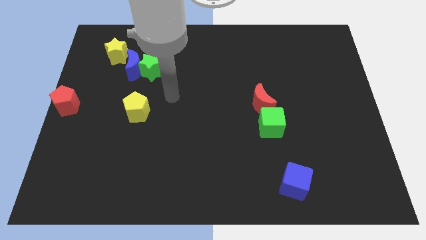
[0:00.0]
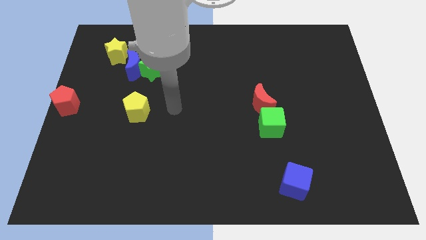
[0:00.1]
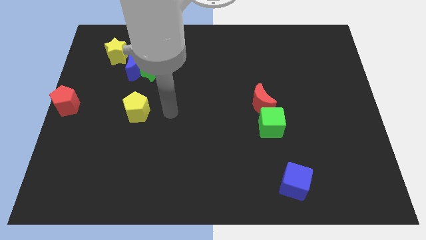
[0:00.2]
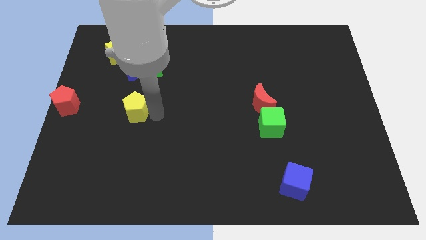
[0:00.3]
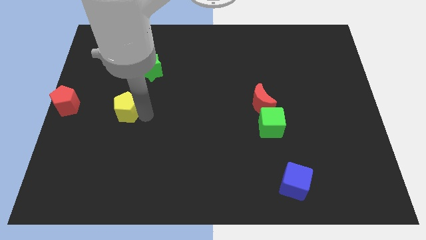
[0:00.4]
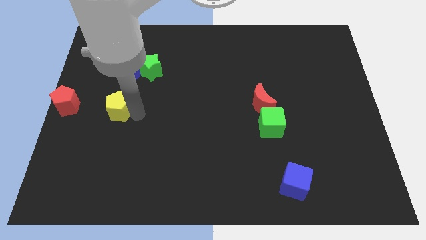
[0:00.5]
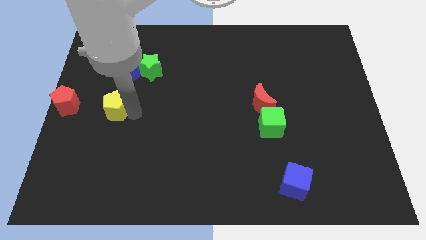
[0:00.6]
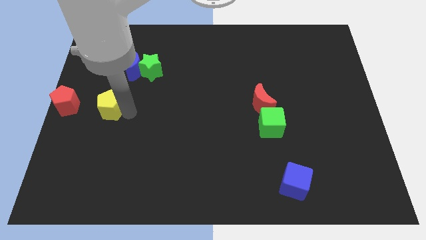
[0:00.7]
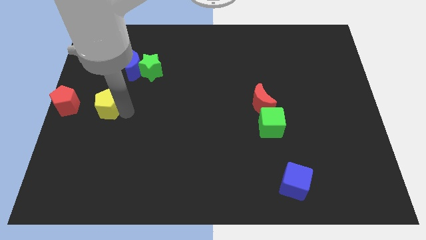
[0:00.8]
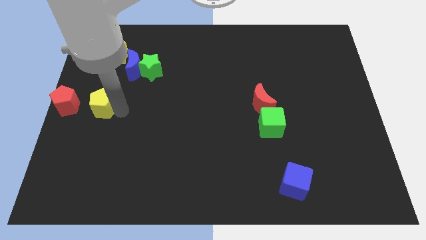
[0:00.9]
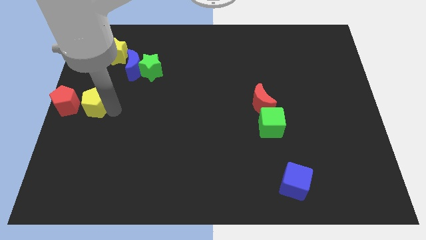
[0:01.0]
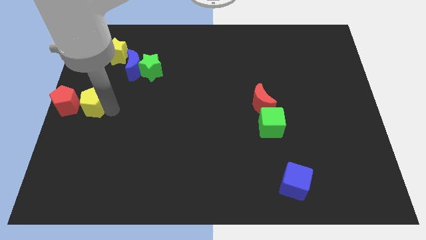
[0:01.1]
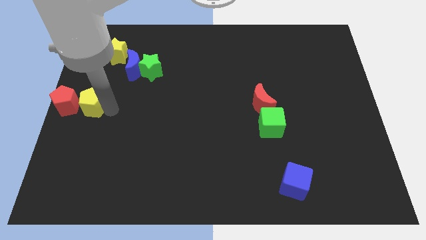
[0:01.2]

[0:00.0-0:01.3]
move the yellow pentagon next to the red pentagon

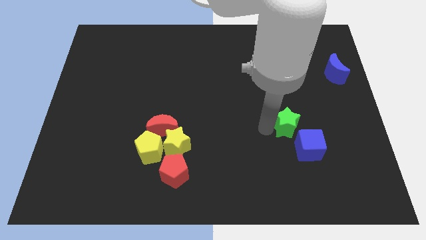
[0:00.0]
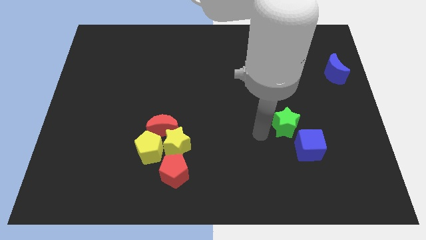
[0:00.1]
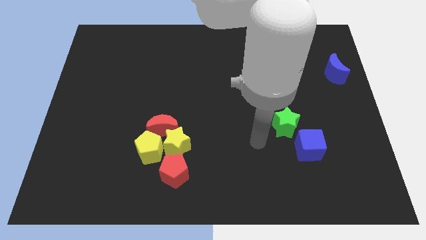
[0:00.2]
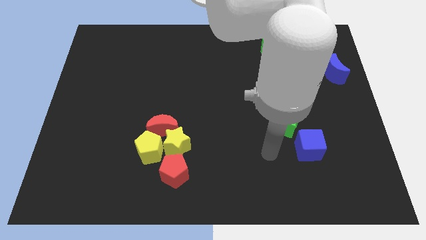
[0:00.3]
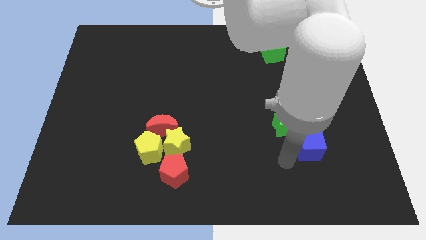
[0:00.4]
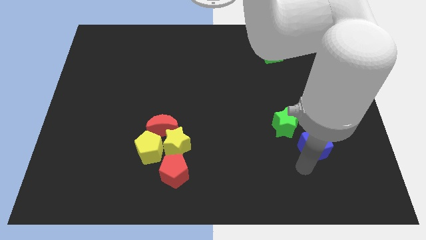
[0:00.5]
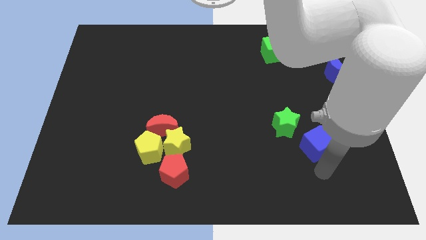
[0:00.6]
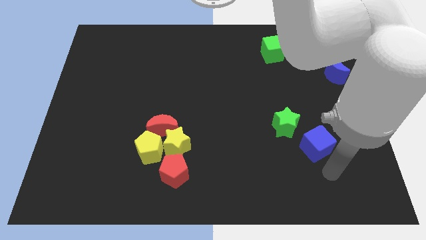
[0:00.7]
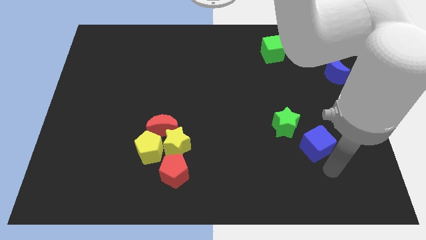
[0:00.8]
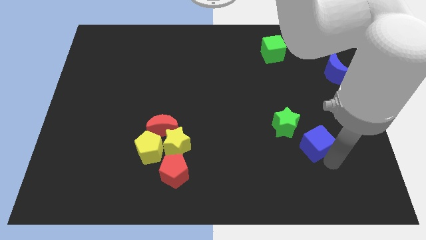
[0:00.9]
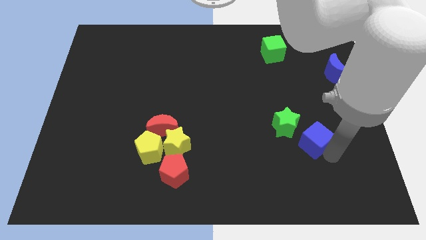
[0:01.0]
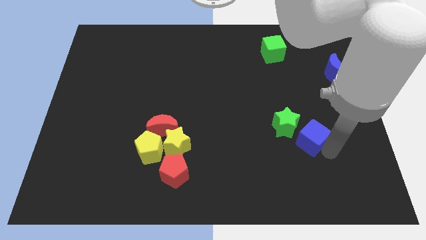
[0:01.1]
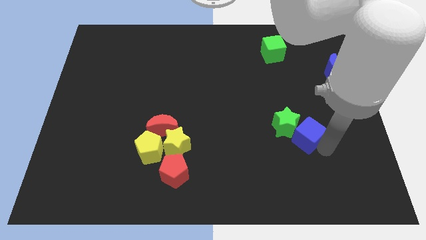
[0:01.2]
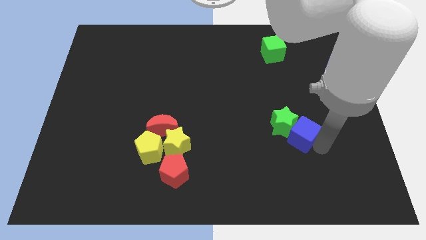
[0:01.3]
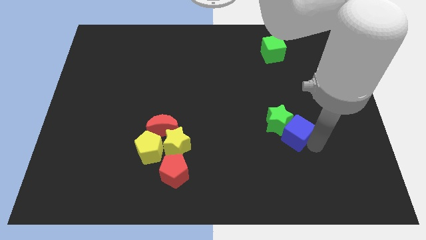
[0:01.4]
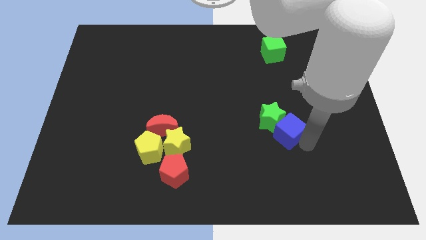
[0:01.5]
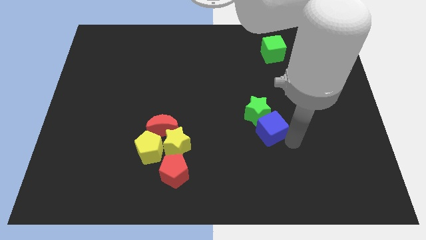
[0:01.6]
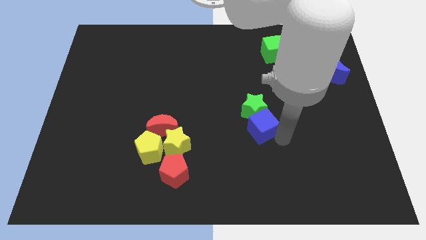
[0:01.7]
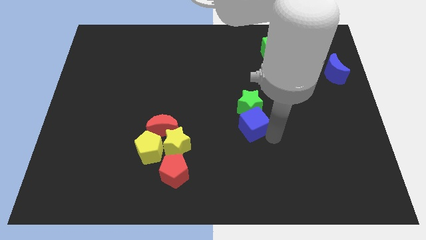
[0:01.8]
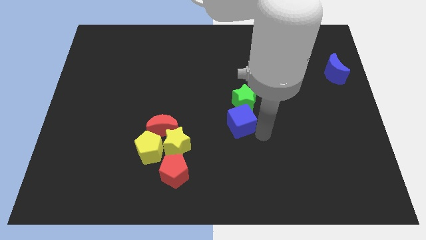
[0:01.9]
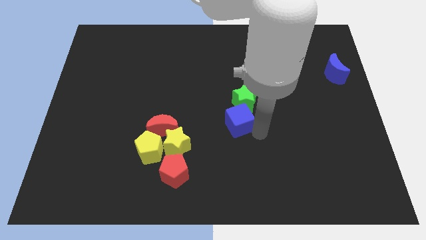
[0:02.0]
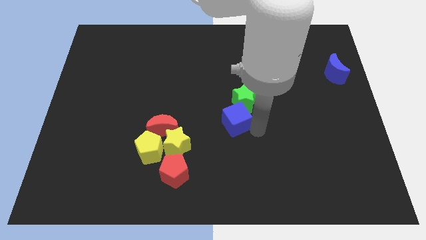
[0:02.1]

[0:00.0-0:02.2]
push the blue cube and green star towards the center of the board

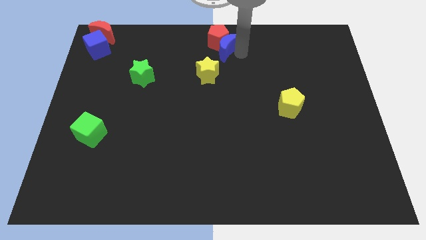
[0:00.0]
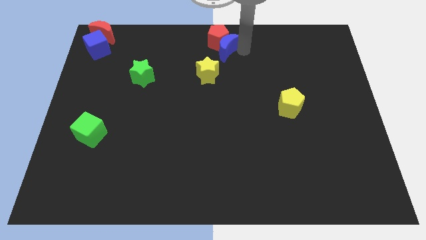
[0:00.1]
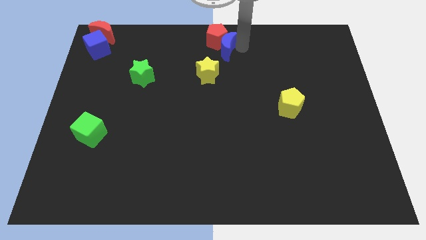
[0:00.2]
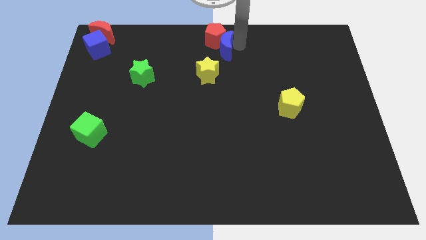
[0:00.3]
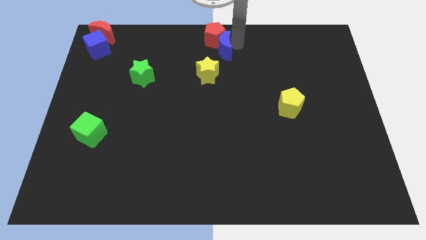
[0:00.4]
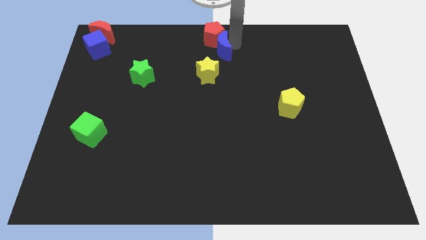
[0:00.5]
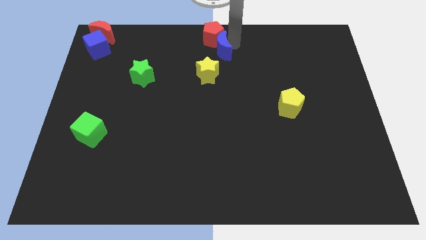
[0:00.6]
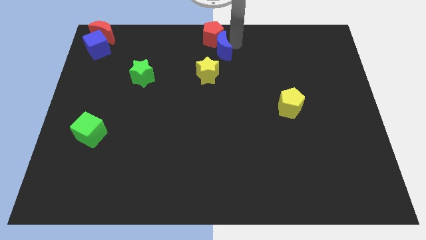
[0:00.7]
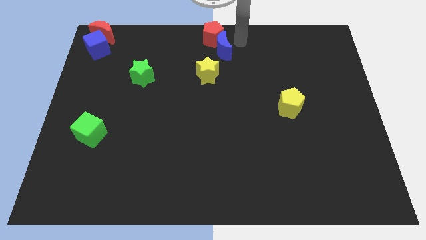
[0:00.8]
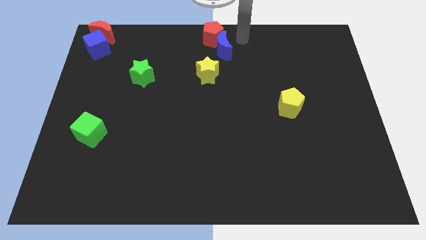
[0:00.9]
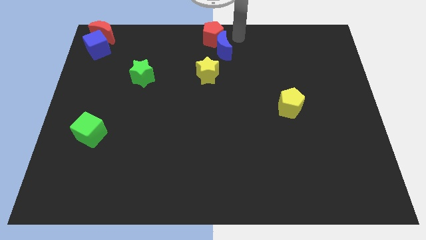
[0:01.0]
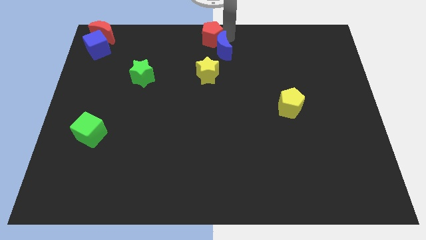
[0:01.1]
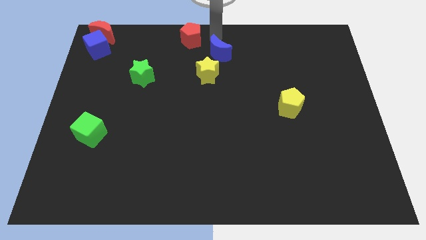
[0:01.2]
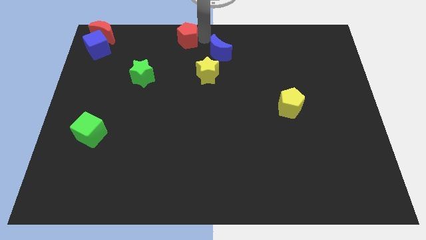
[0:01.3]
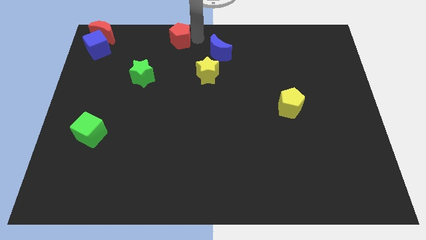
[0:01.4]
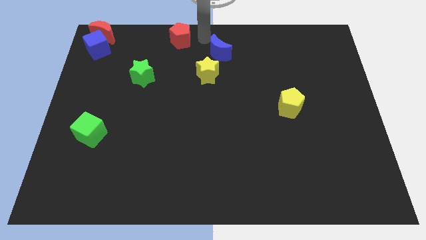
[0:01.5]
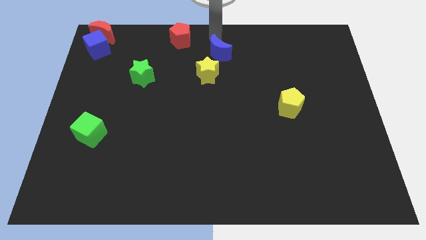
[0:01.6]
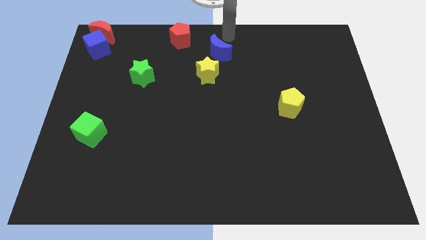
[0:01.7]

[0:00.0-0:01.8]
separate the red pentagon from blue crescent

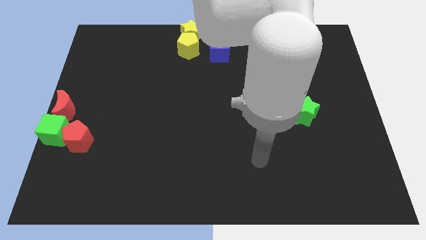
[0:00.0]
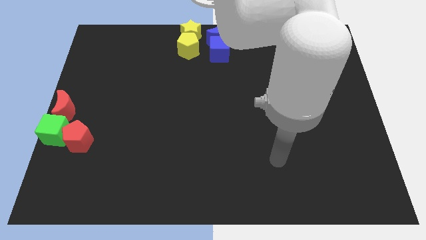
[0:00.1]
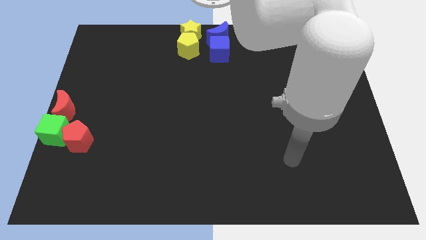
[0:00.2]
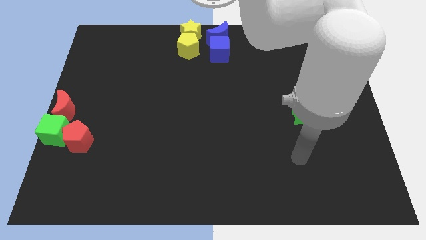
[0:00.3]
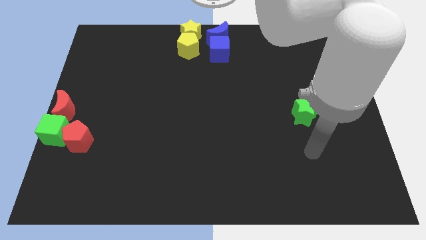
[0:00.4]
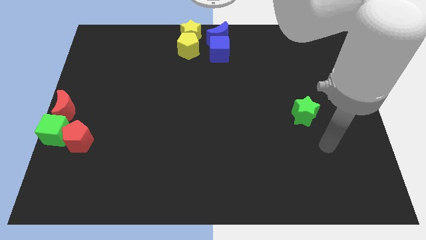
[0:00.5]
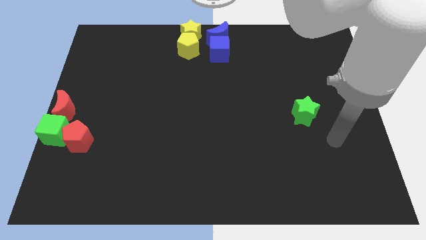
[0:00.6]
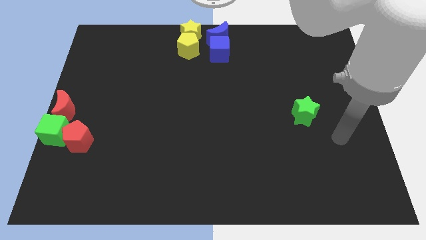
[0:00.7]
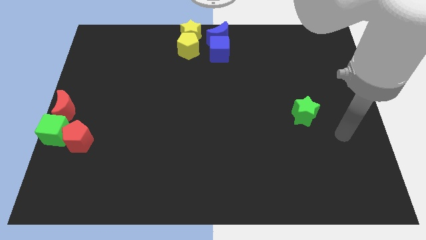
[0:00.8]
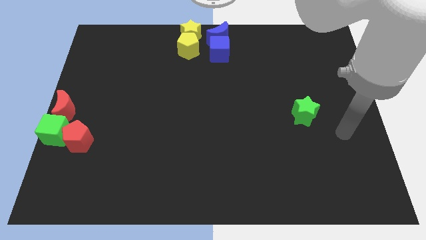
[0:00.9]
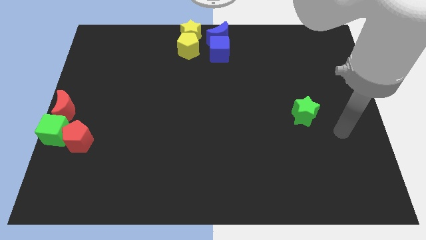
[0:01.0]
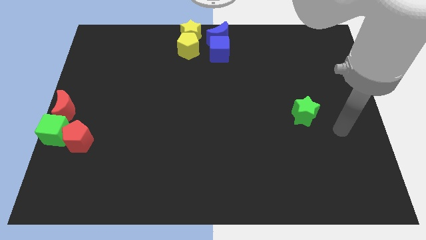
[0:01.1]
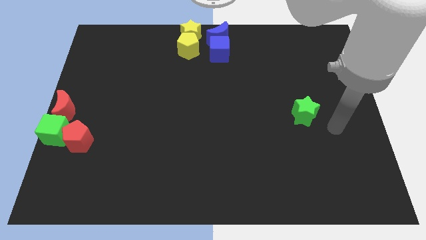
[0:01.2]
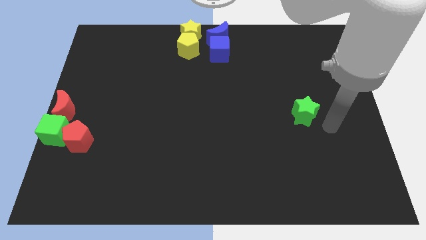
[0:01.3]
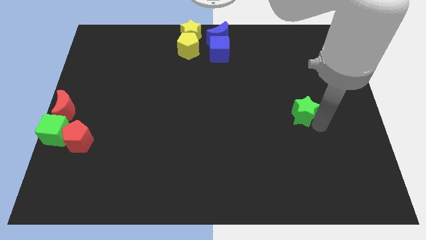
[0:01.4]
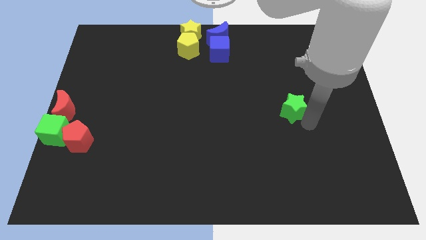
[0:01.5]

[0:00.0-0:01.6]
move the arm to the green star

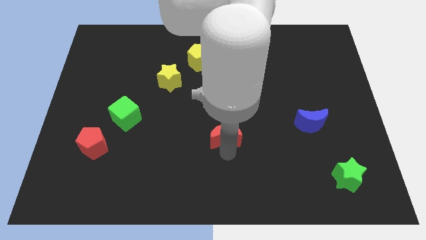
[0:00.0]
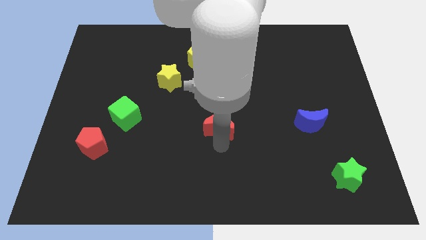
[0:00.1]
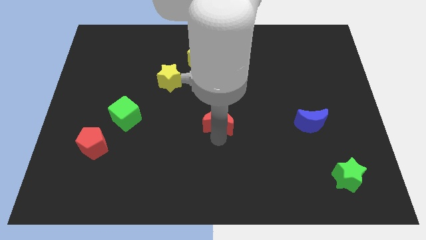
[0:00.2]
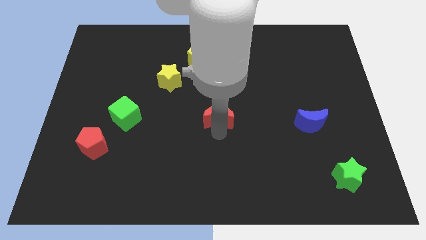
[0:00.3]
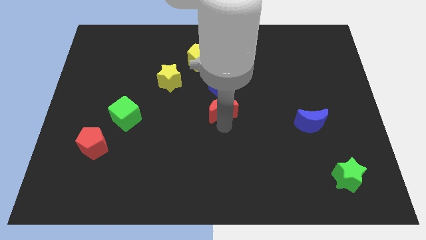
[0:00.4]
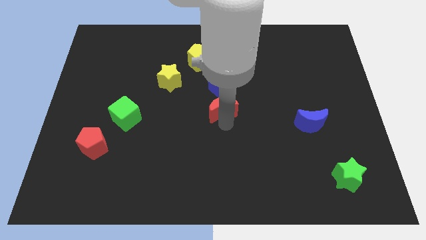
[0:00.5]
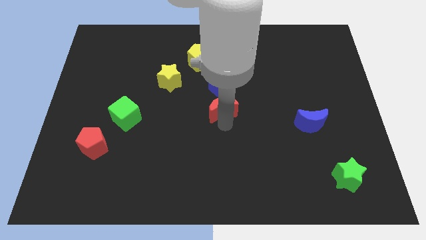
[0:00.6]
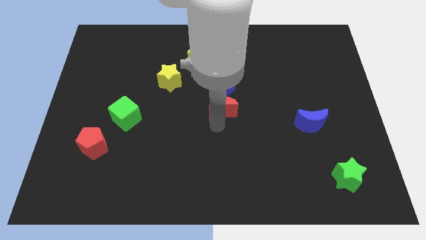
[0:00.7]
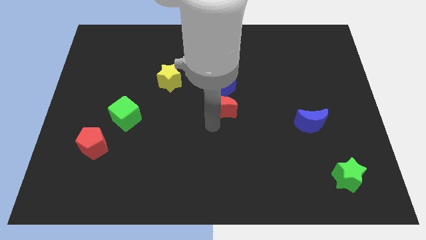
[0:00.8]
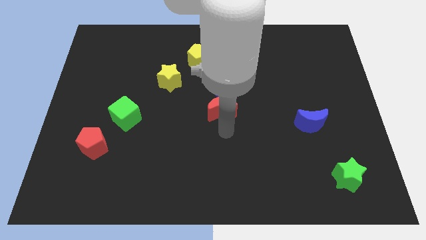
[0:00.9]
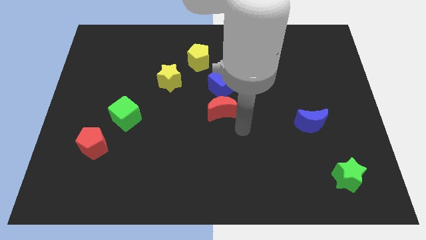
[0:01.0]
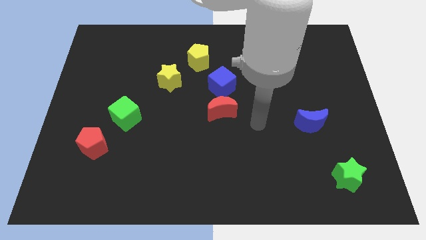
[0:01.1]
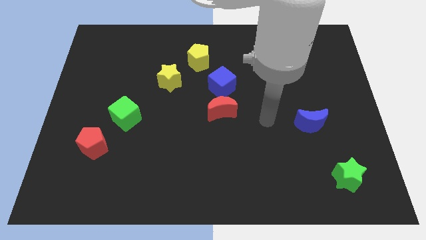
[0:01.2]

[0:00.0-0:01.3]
place the red moon at the bottom of blue cube

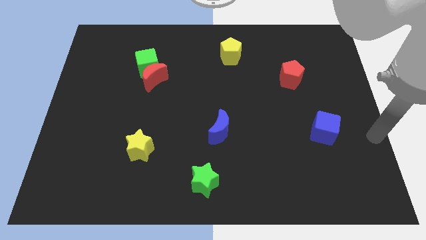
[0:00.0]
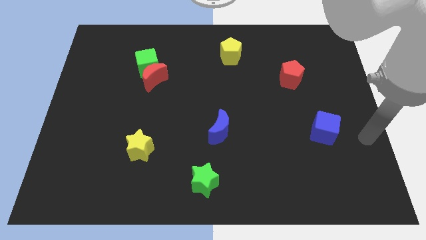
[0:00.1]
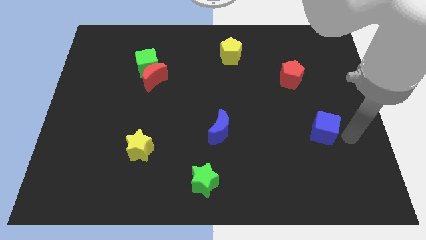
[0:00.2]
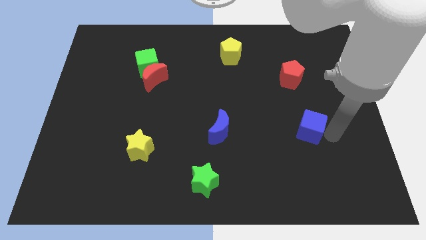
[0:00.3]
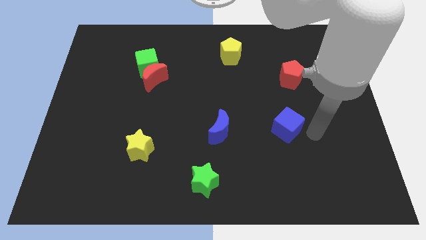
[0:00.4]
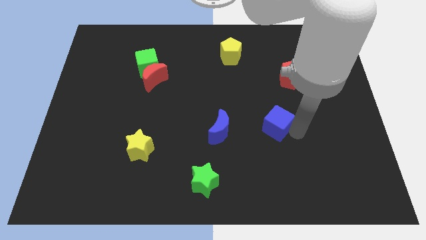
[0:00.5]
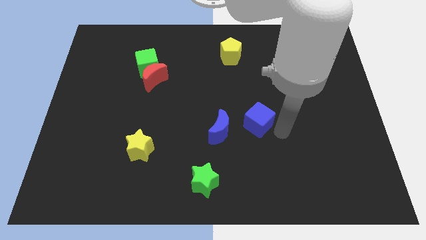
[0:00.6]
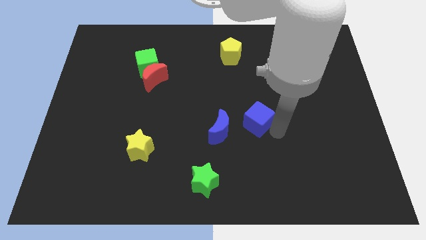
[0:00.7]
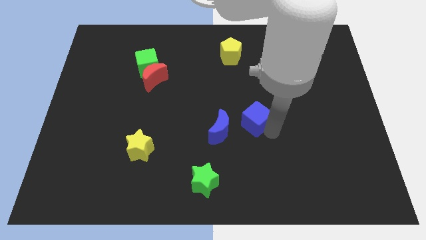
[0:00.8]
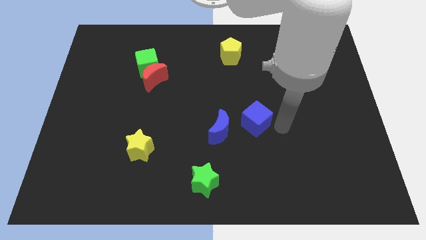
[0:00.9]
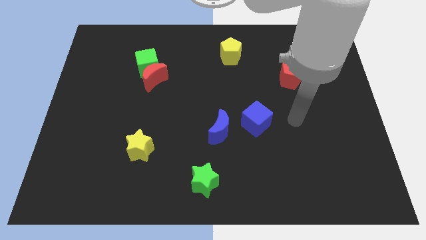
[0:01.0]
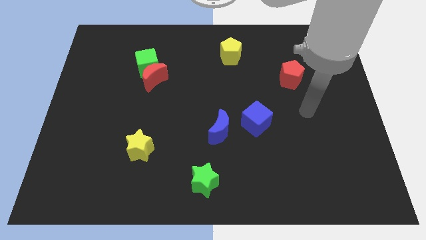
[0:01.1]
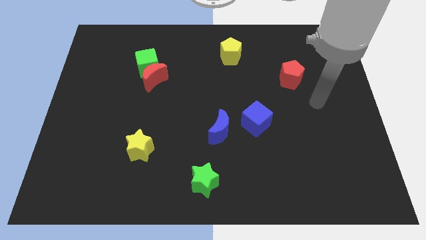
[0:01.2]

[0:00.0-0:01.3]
move the blue cube diagonally in between the red pentagon and the green star
